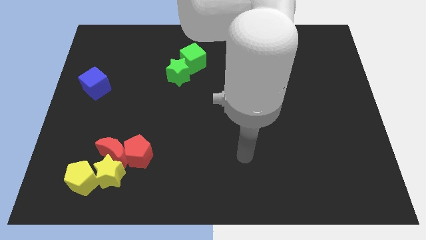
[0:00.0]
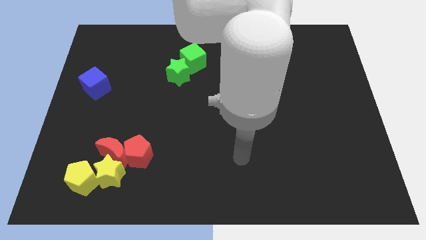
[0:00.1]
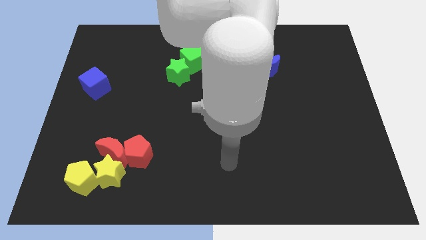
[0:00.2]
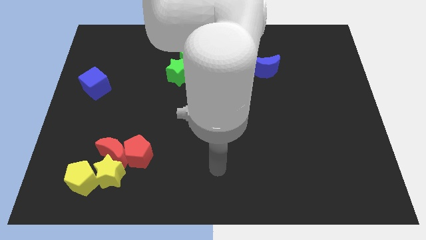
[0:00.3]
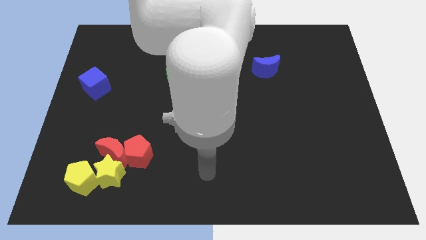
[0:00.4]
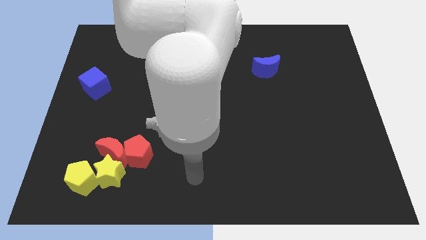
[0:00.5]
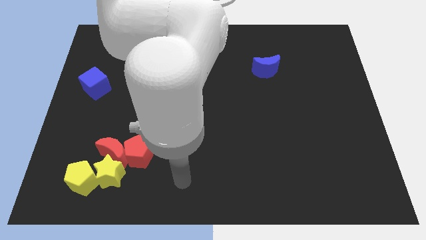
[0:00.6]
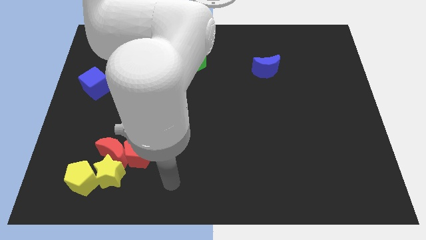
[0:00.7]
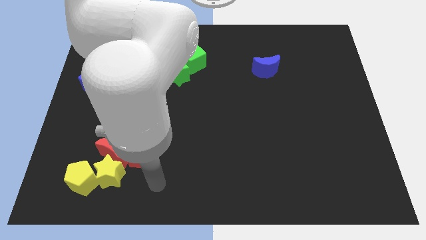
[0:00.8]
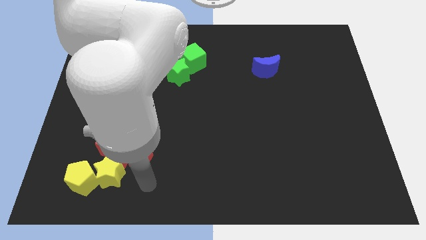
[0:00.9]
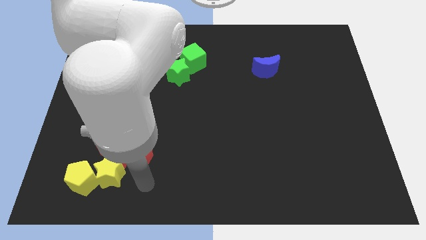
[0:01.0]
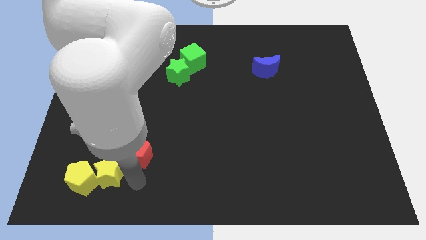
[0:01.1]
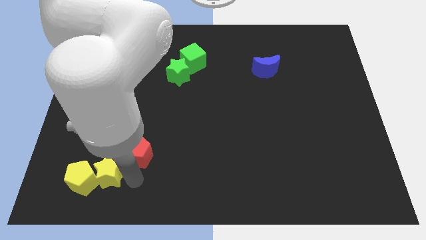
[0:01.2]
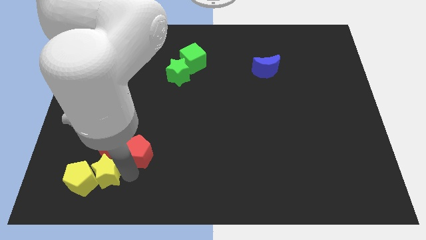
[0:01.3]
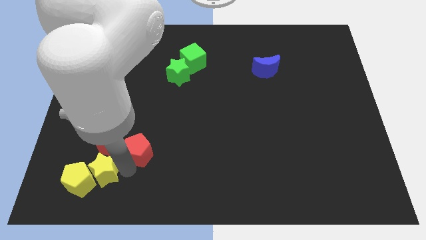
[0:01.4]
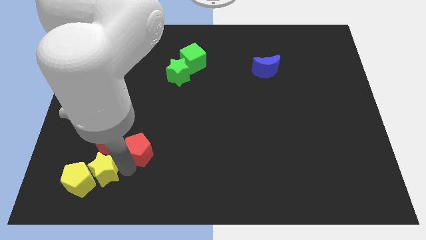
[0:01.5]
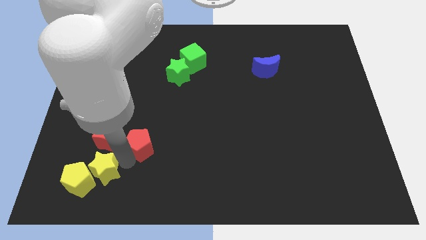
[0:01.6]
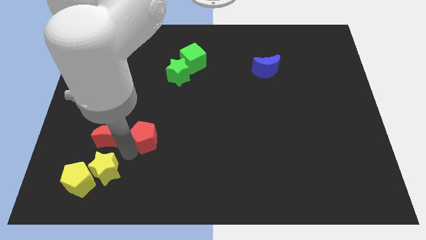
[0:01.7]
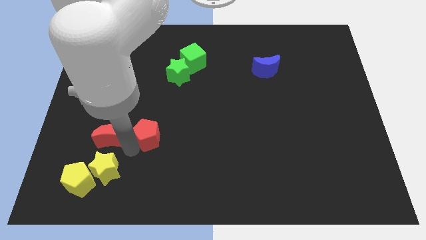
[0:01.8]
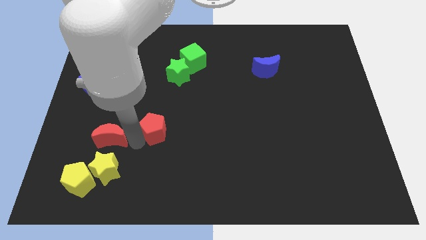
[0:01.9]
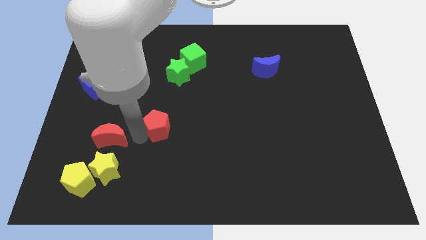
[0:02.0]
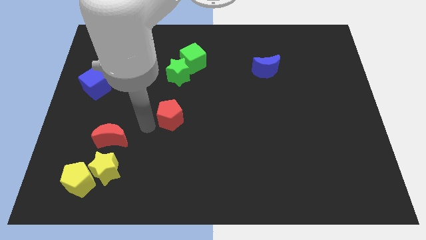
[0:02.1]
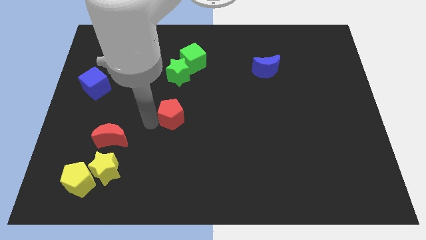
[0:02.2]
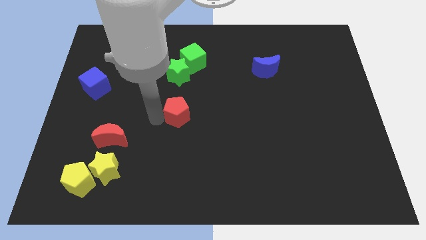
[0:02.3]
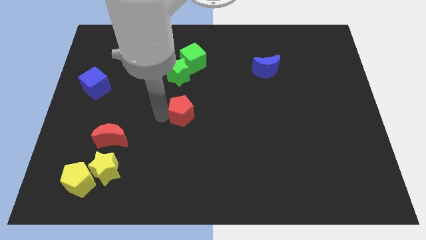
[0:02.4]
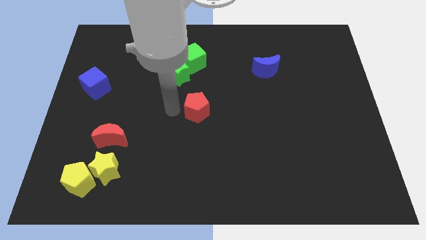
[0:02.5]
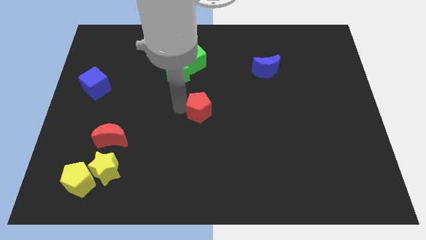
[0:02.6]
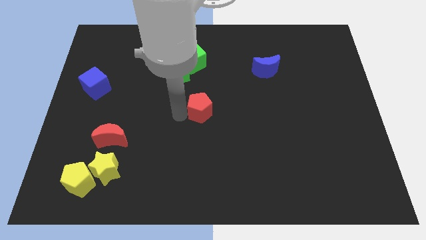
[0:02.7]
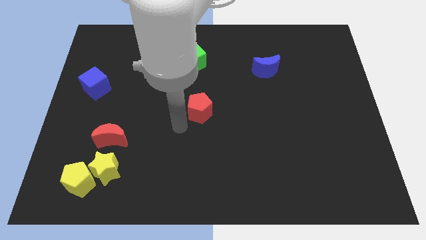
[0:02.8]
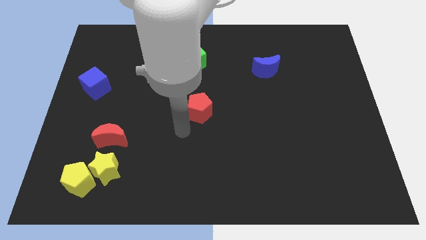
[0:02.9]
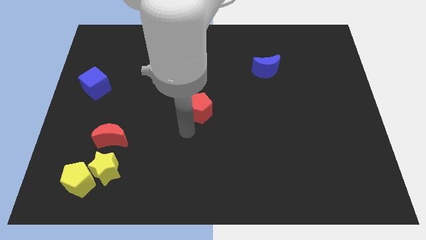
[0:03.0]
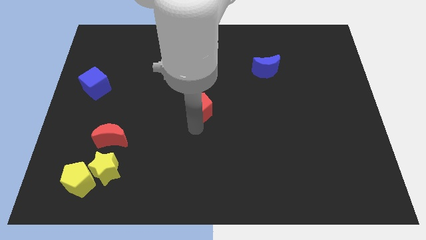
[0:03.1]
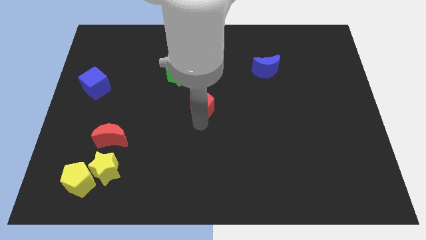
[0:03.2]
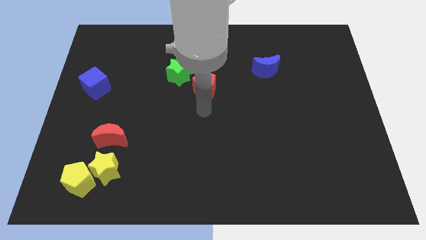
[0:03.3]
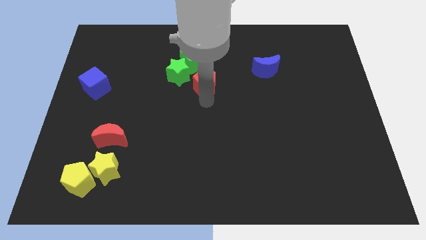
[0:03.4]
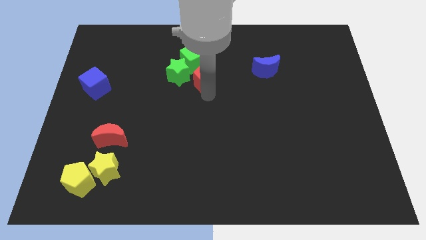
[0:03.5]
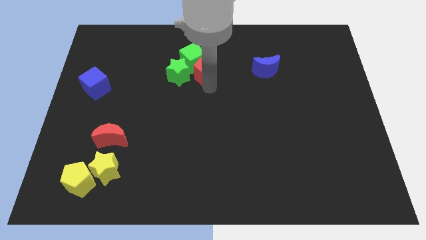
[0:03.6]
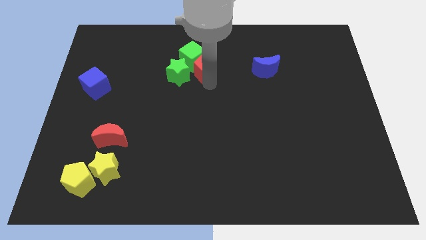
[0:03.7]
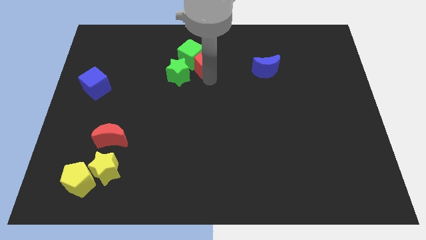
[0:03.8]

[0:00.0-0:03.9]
move the red pentagon towards the green cube

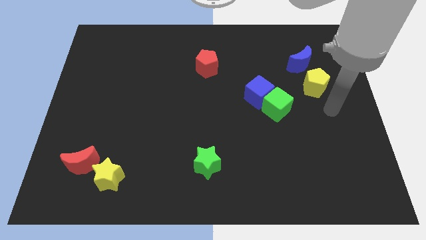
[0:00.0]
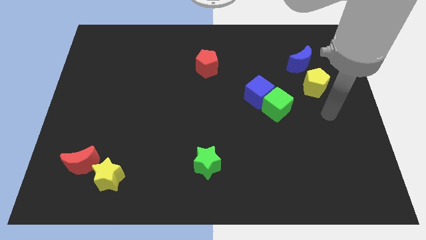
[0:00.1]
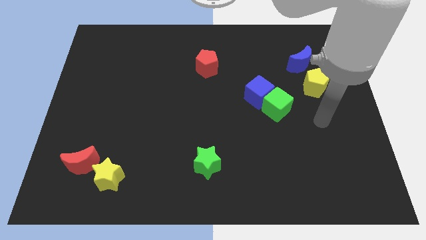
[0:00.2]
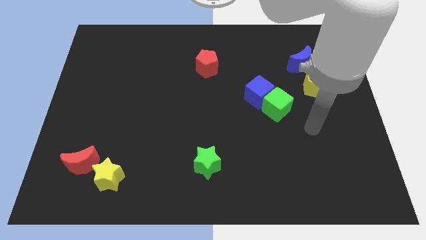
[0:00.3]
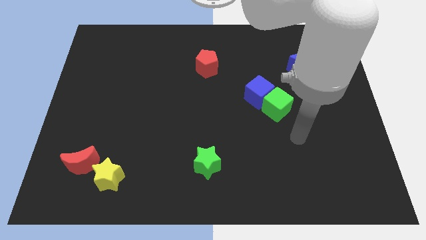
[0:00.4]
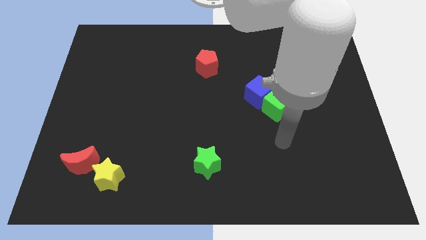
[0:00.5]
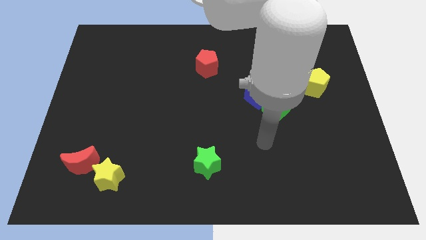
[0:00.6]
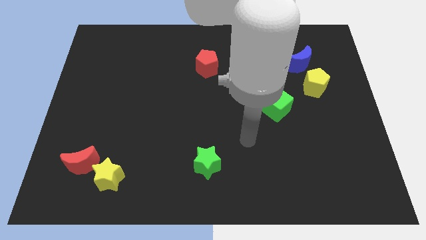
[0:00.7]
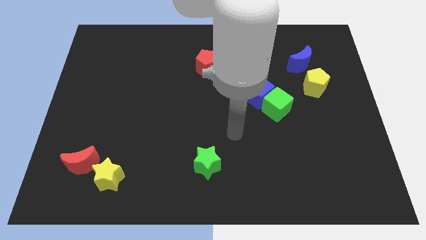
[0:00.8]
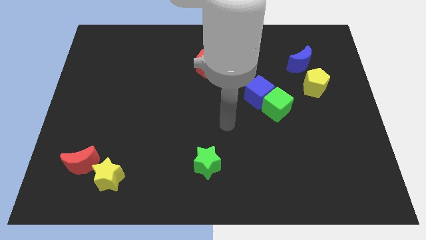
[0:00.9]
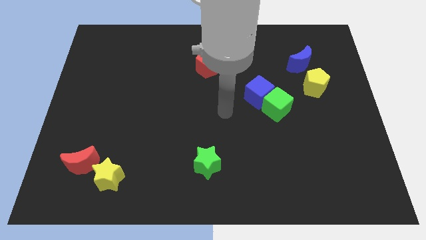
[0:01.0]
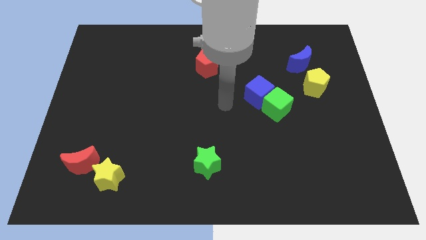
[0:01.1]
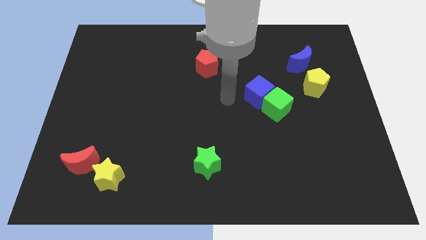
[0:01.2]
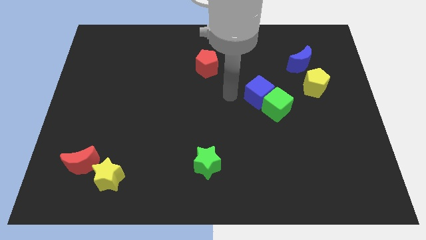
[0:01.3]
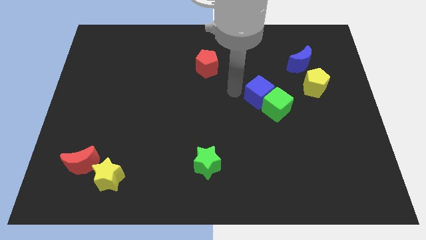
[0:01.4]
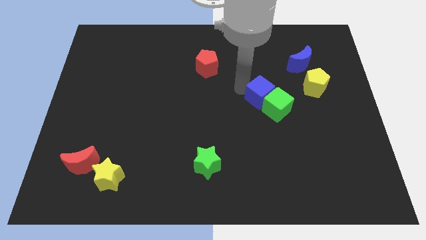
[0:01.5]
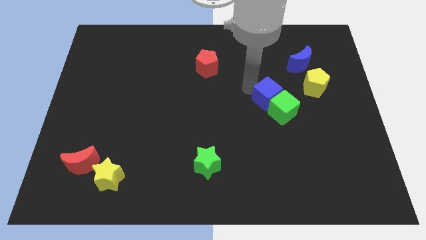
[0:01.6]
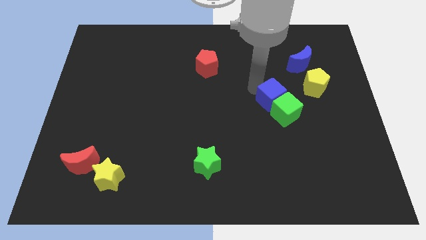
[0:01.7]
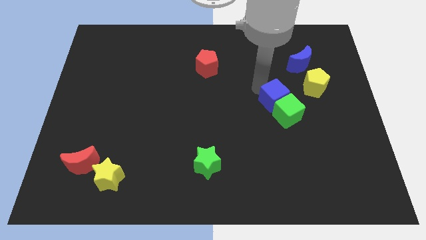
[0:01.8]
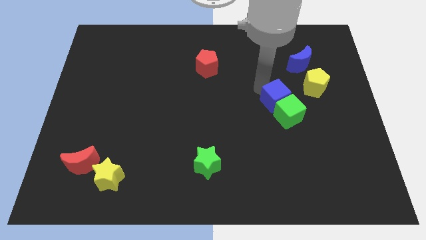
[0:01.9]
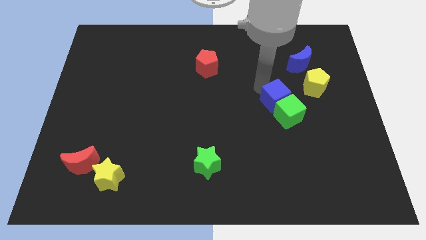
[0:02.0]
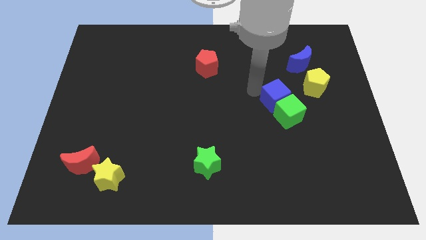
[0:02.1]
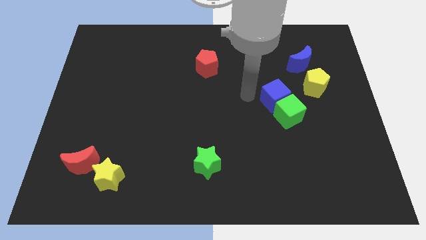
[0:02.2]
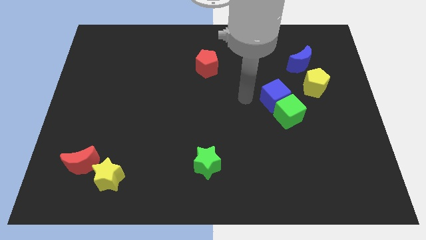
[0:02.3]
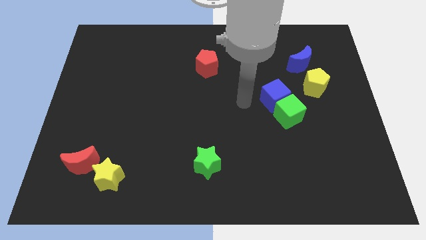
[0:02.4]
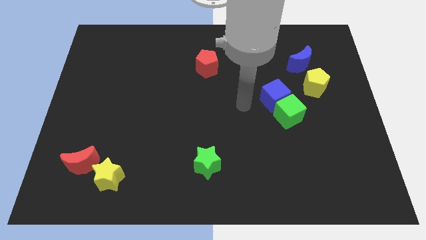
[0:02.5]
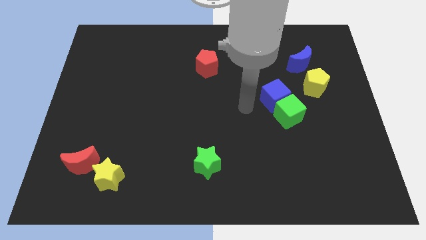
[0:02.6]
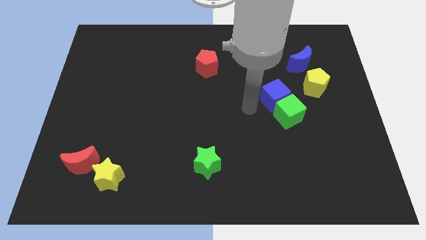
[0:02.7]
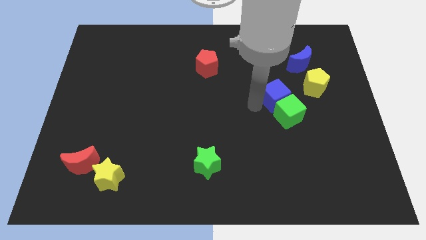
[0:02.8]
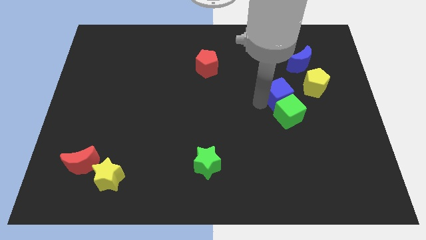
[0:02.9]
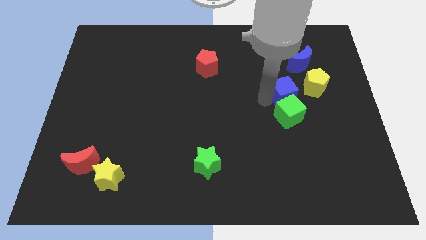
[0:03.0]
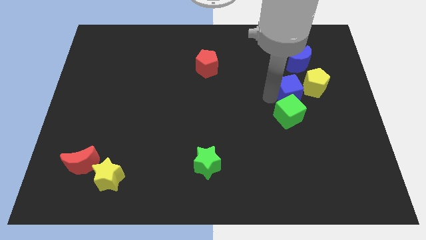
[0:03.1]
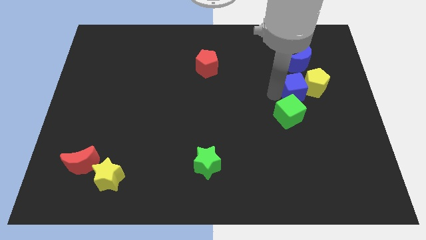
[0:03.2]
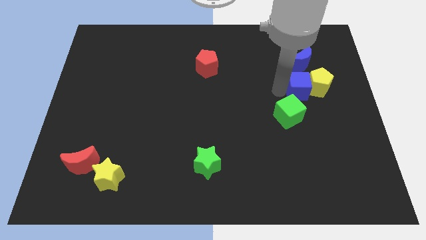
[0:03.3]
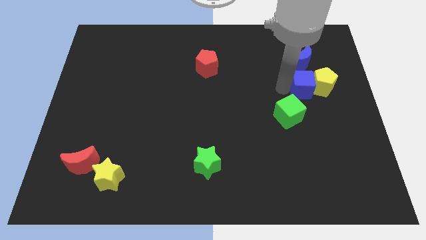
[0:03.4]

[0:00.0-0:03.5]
move the blue cube next to the yellow pentagon

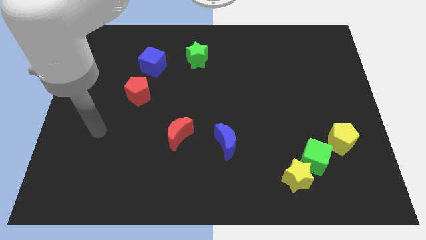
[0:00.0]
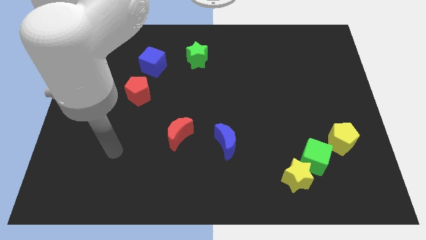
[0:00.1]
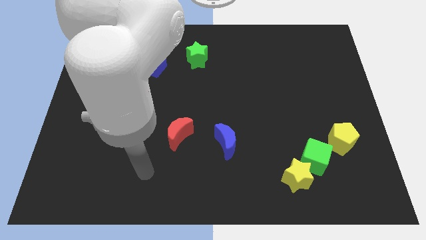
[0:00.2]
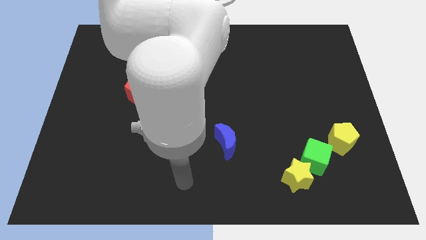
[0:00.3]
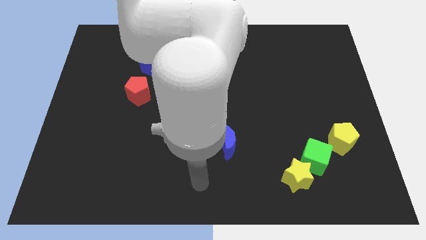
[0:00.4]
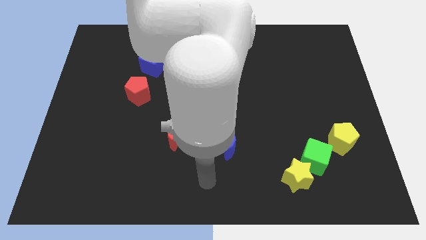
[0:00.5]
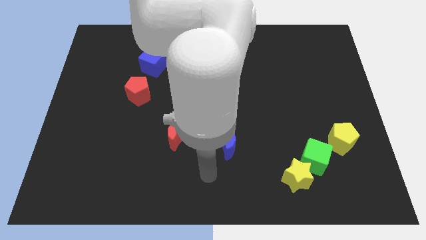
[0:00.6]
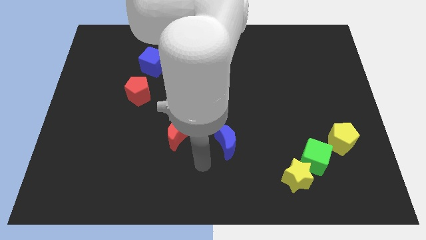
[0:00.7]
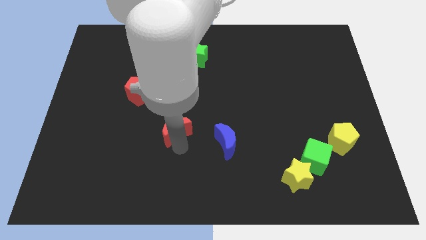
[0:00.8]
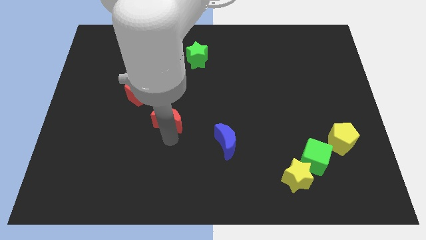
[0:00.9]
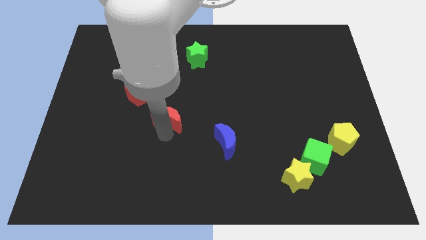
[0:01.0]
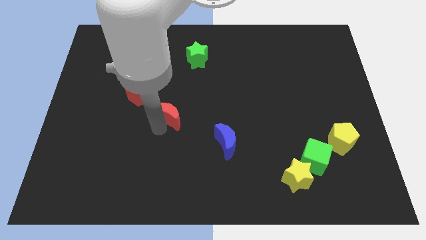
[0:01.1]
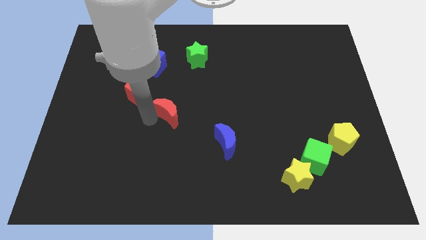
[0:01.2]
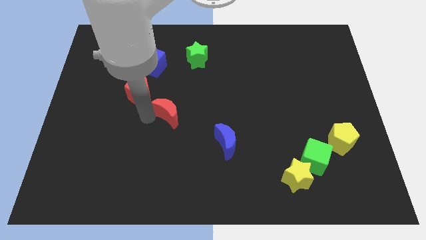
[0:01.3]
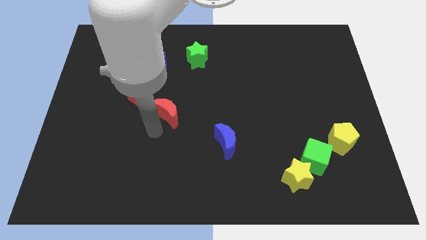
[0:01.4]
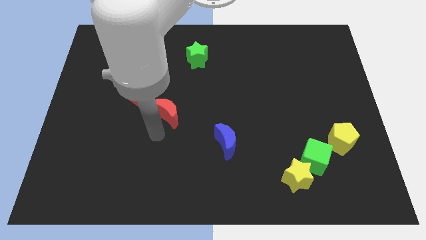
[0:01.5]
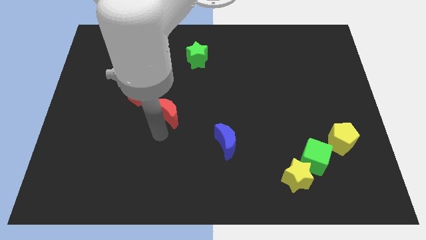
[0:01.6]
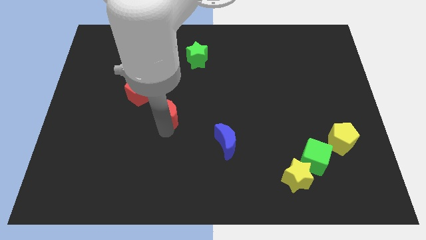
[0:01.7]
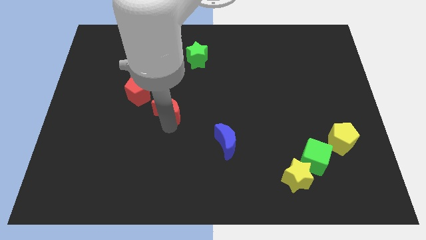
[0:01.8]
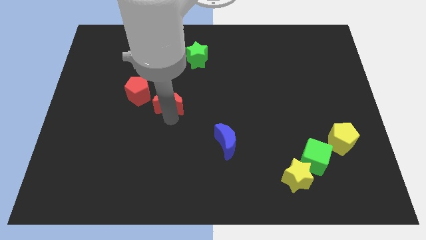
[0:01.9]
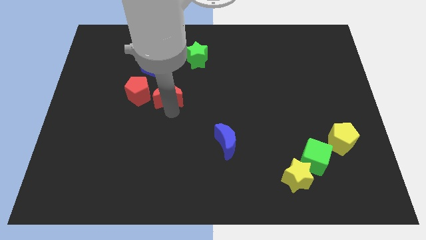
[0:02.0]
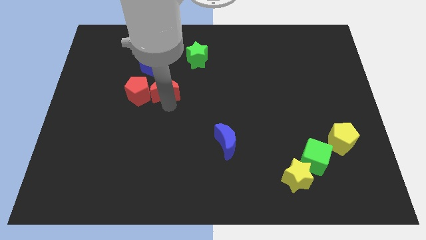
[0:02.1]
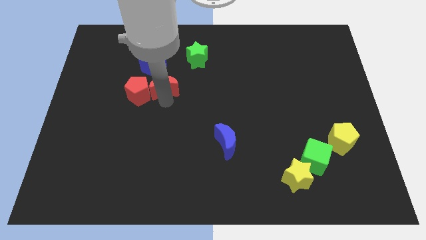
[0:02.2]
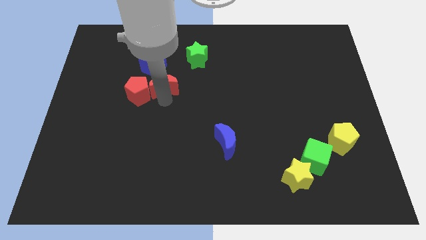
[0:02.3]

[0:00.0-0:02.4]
put the red moon towards the red pentagon
